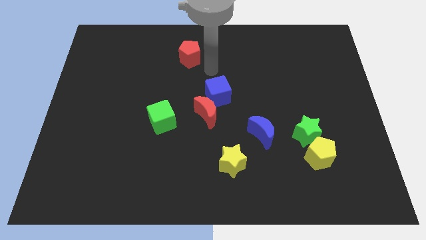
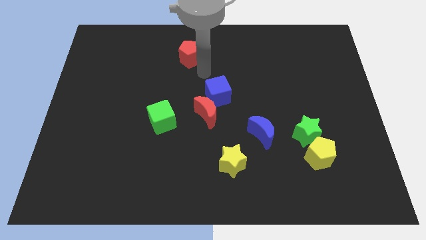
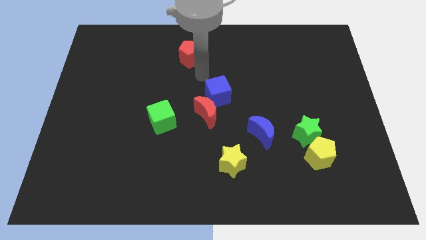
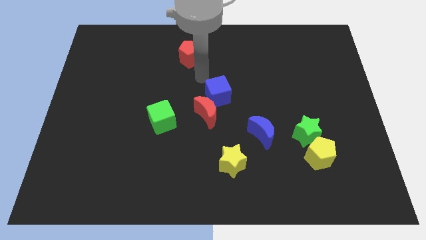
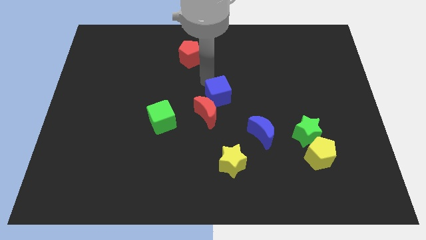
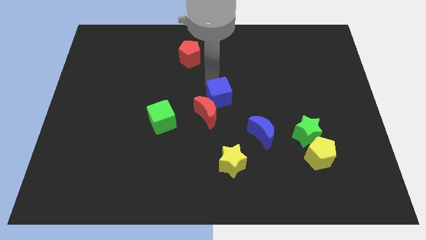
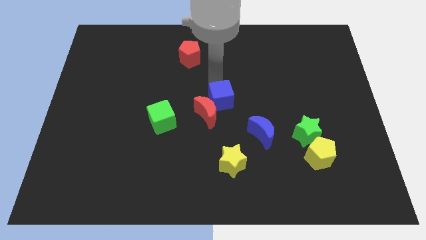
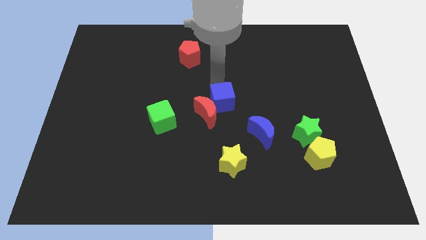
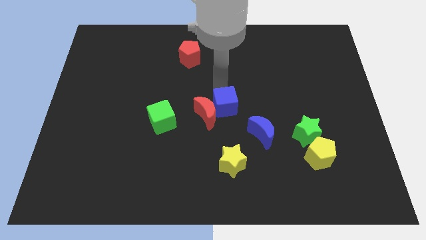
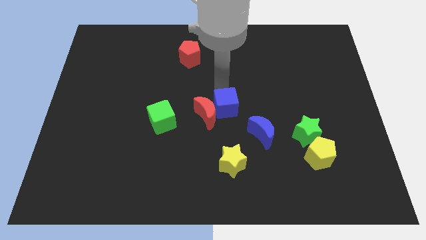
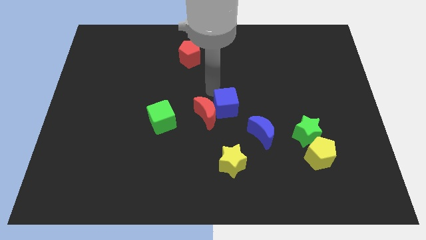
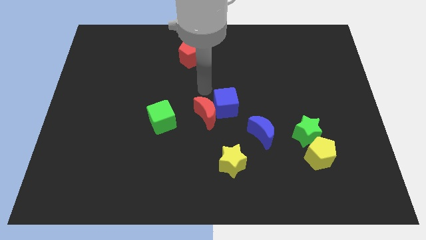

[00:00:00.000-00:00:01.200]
place blue cube to the right of red crescent

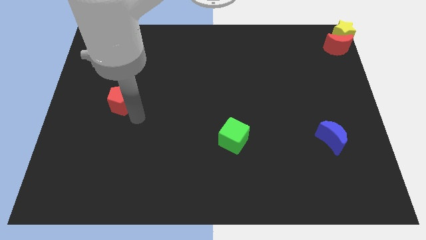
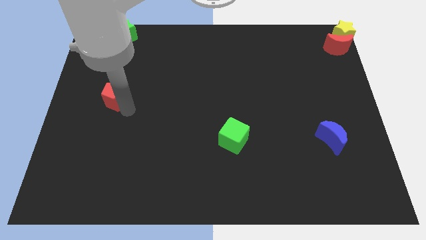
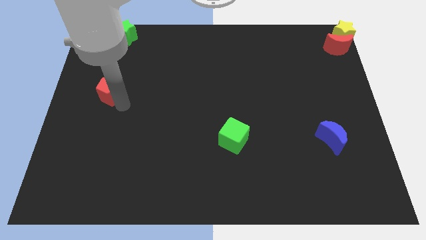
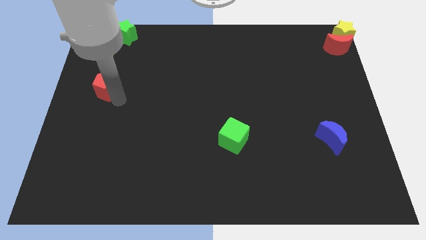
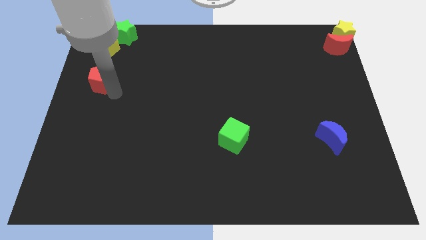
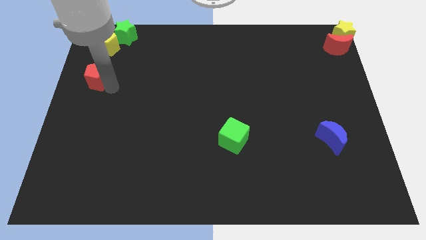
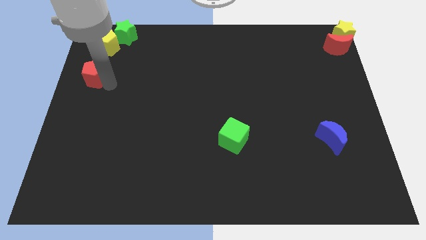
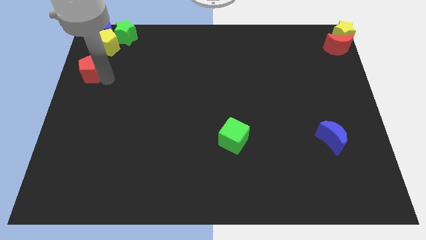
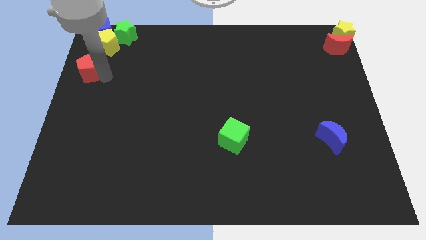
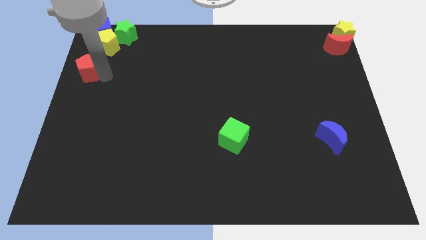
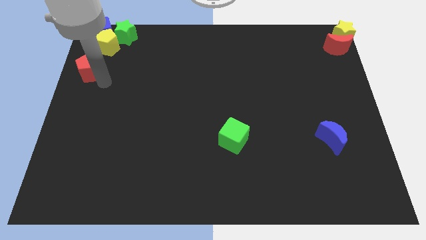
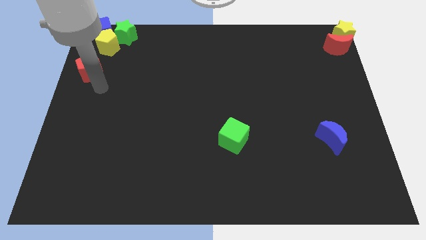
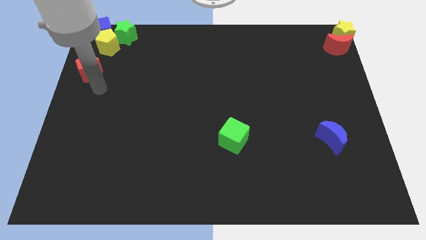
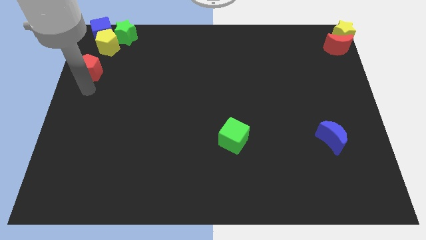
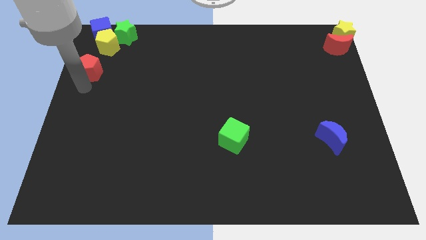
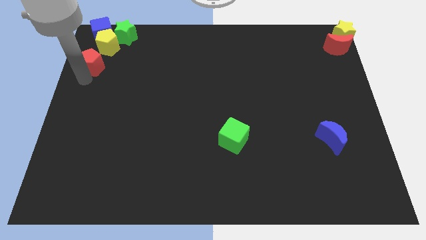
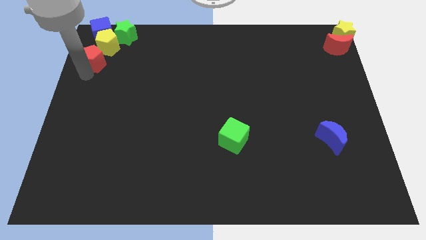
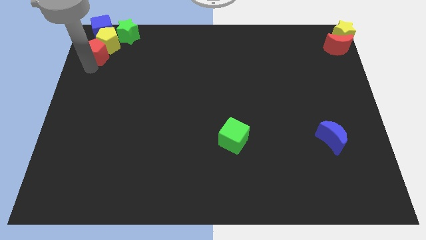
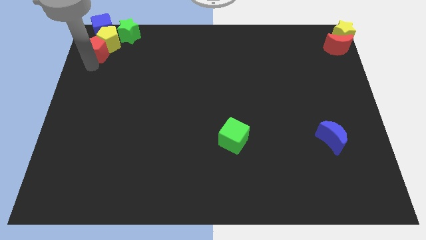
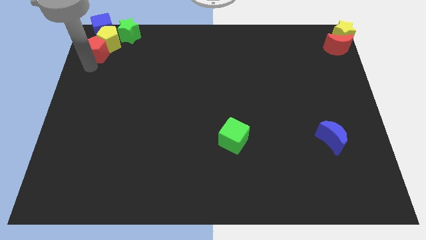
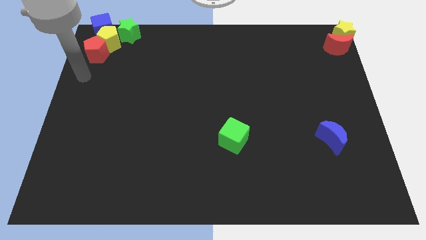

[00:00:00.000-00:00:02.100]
push red pentagon into yellow pentagon

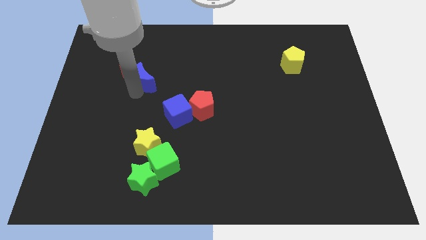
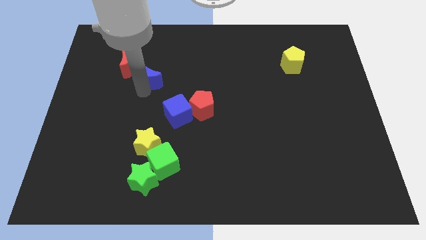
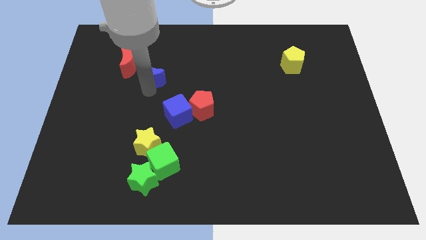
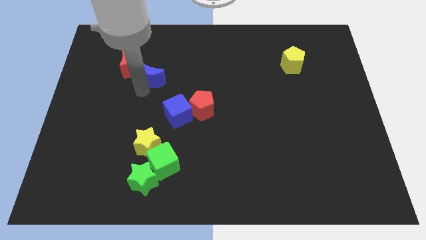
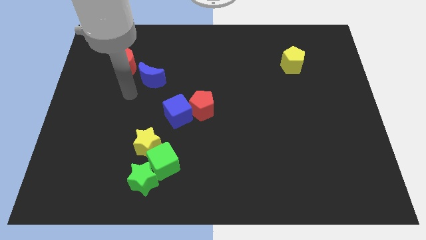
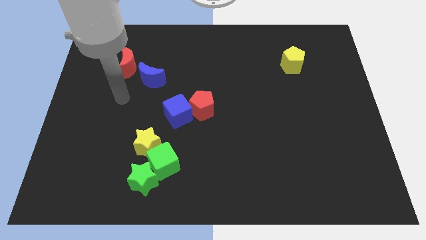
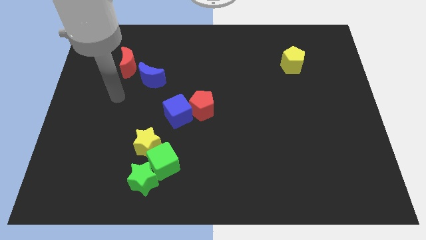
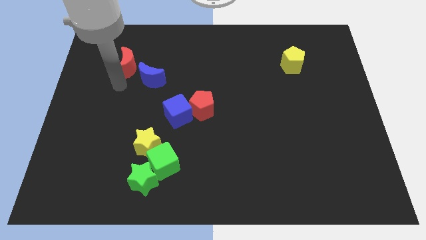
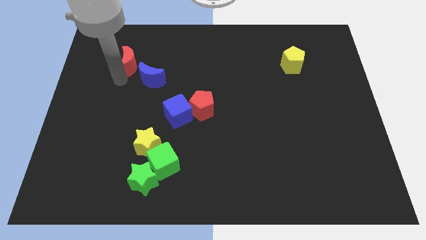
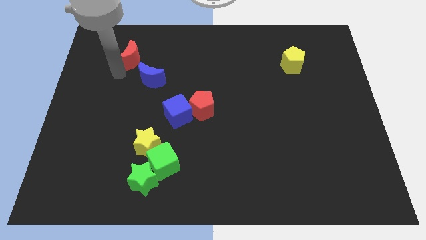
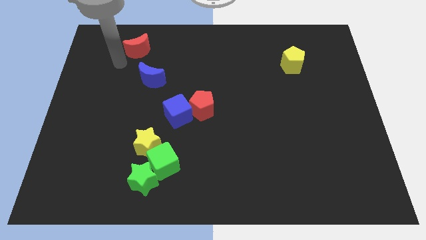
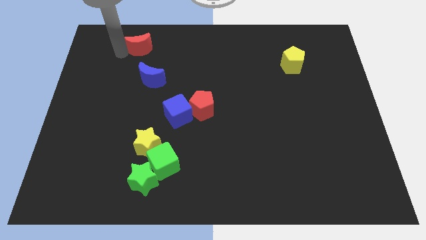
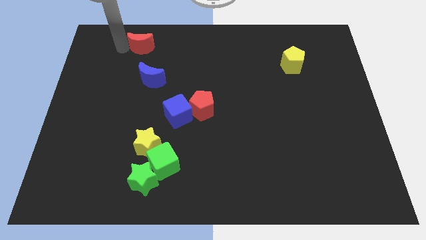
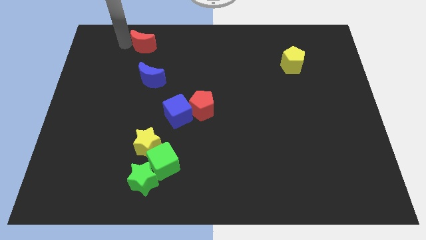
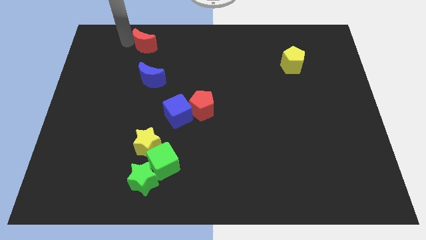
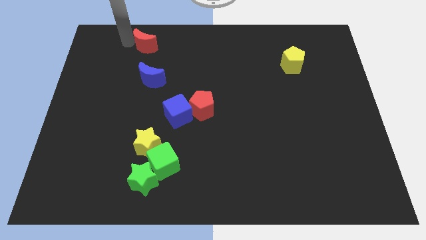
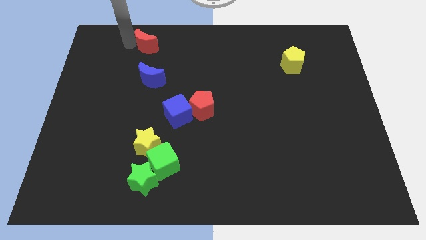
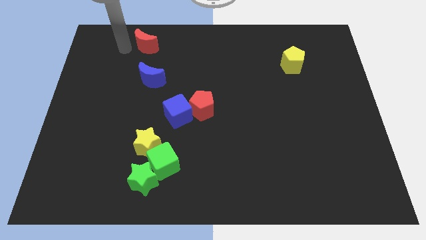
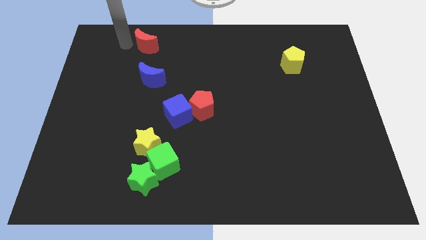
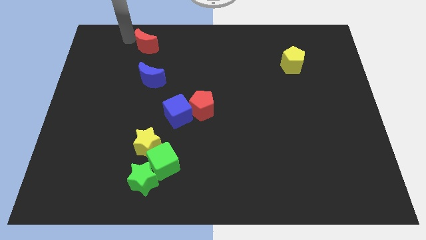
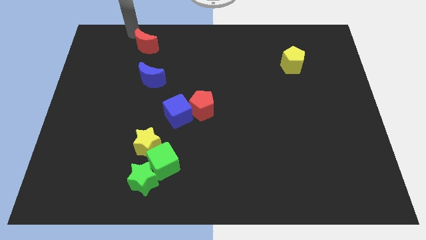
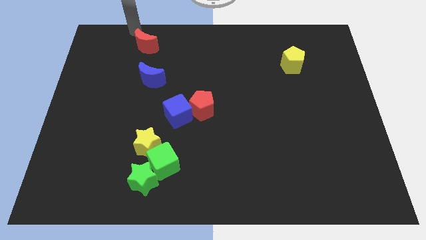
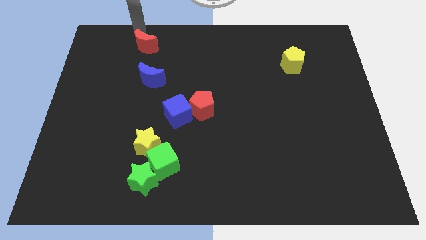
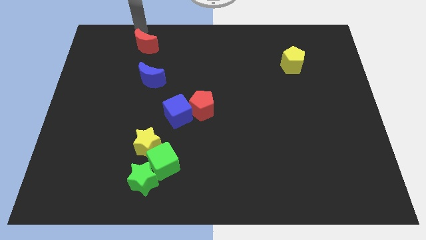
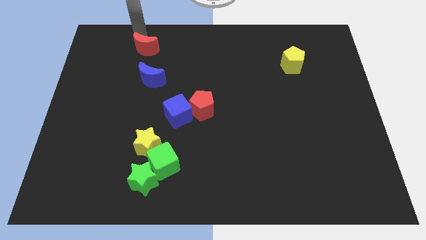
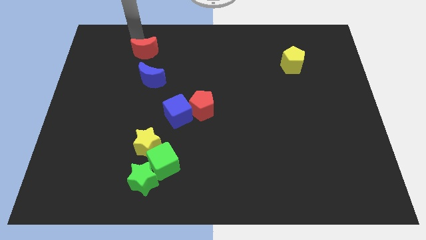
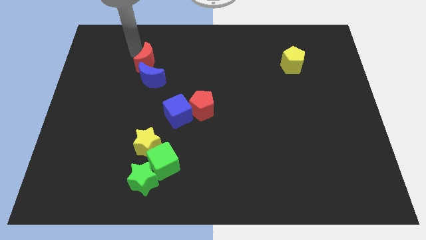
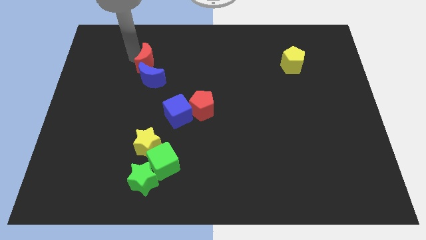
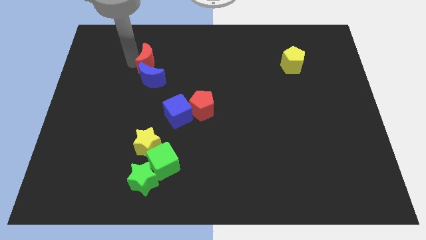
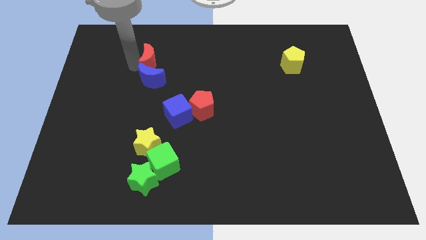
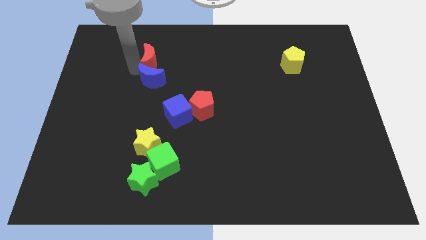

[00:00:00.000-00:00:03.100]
push red moon into blue moon

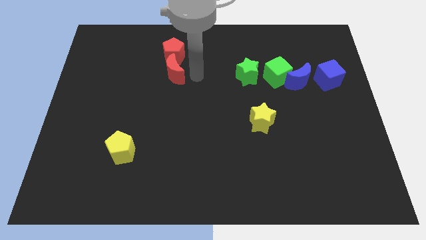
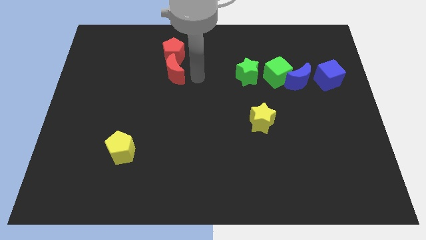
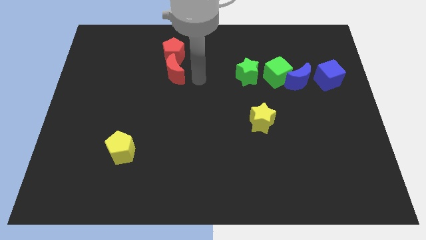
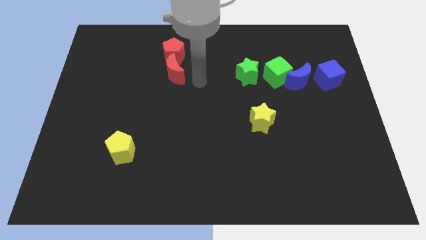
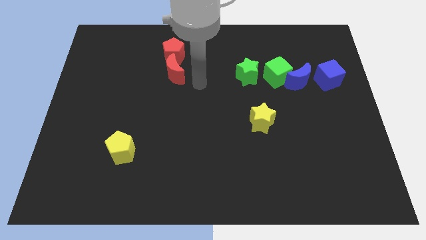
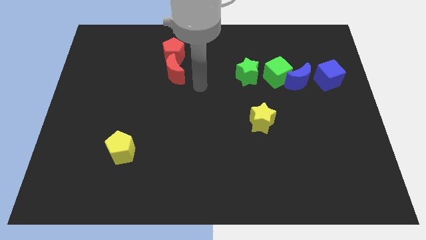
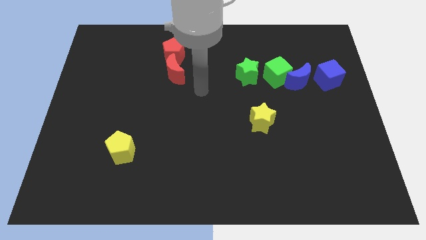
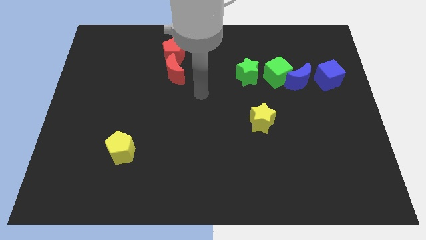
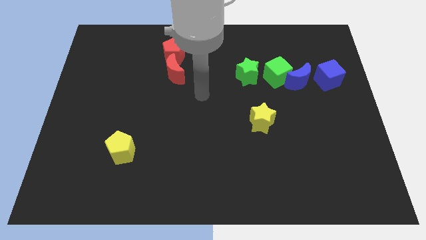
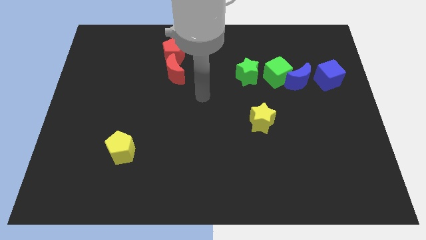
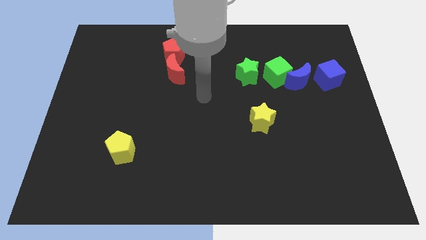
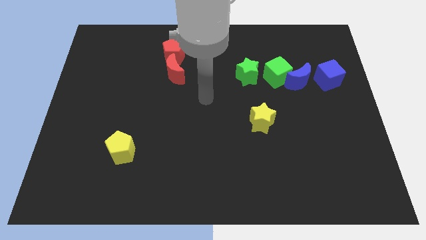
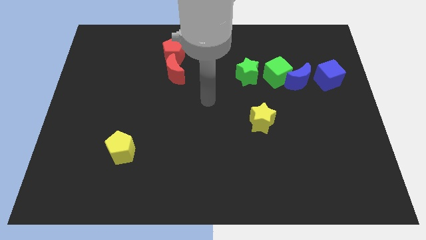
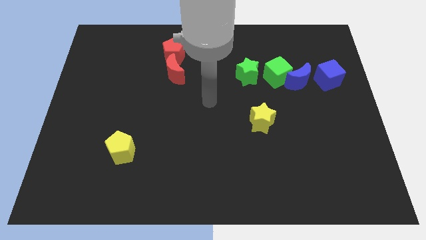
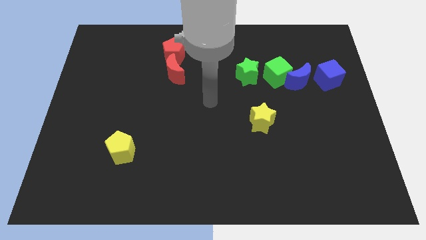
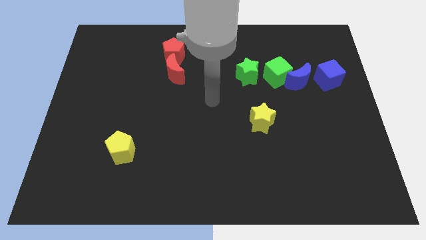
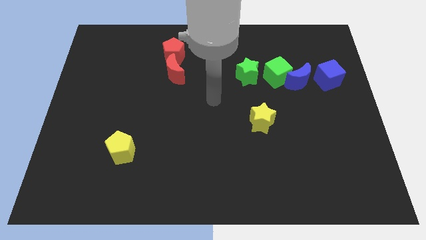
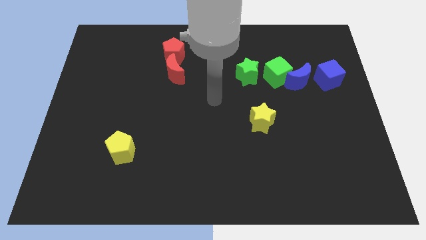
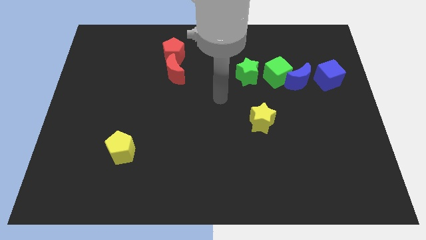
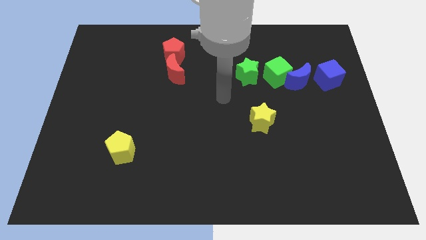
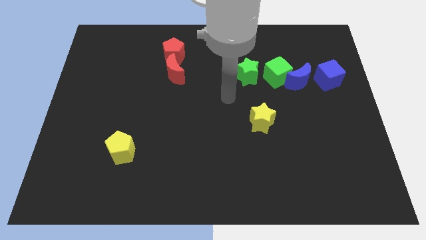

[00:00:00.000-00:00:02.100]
go away from the red moon

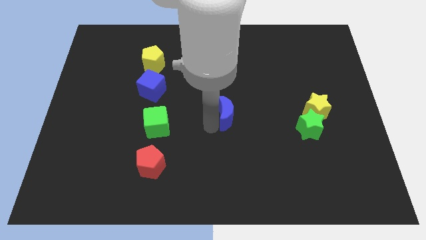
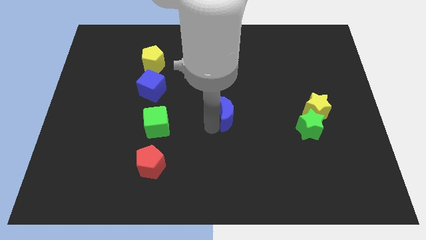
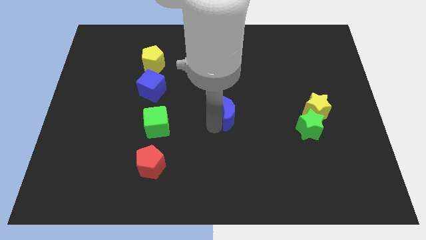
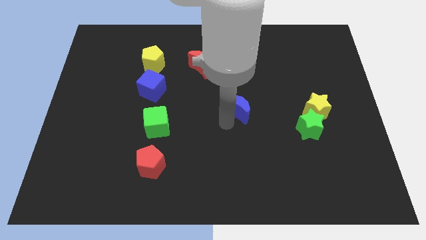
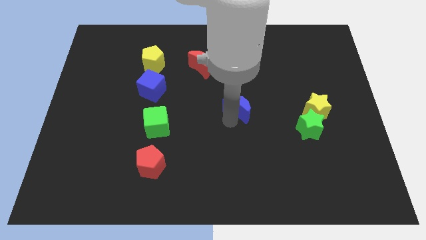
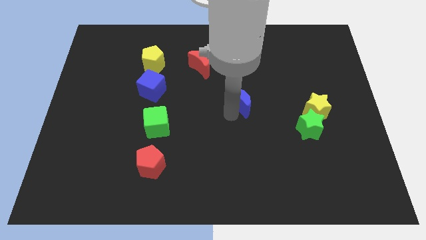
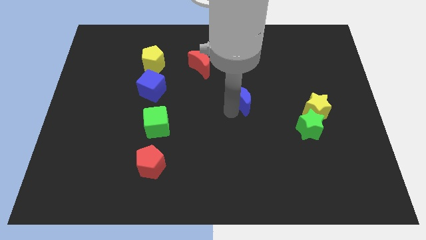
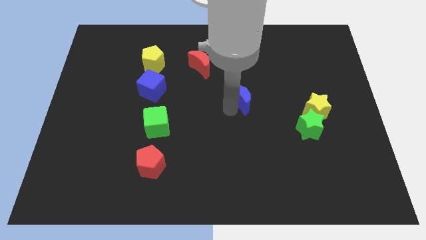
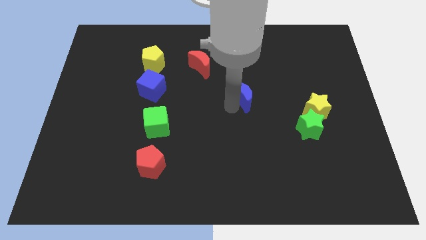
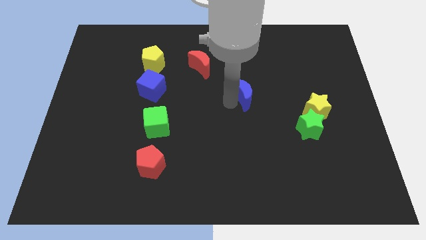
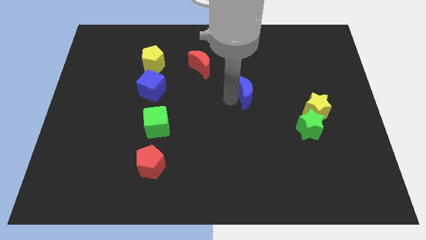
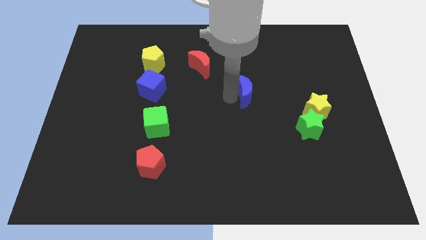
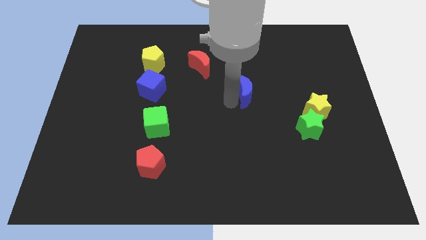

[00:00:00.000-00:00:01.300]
put the blue moon diagonally to the bottom right of the red crescent
